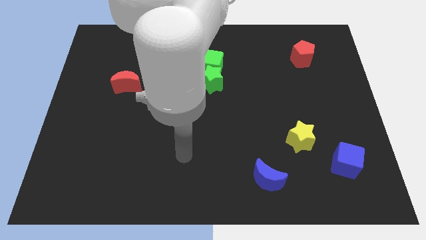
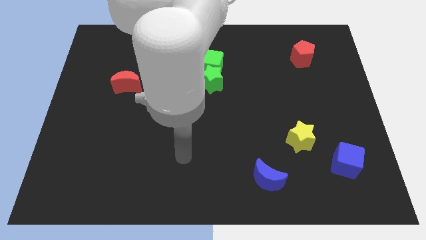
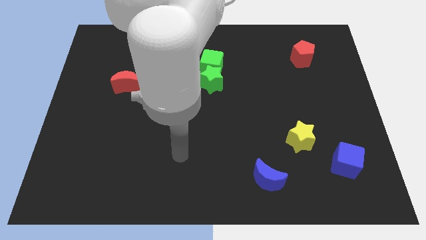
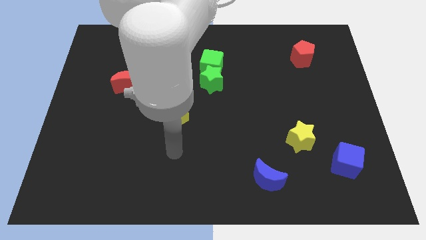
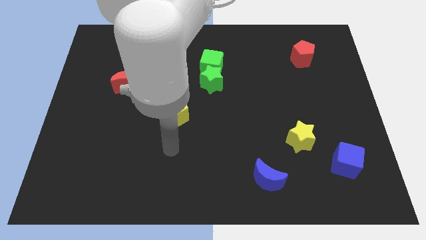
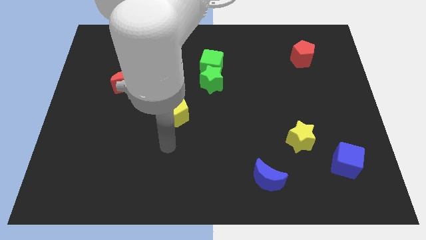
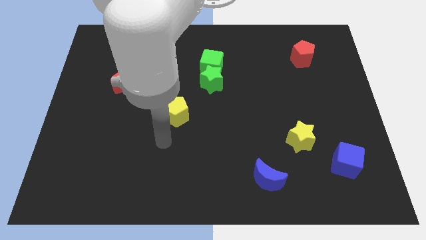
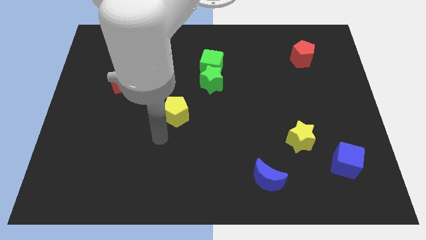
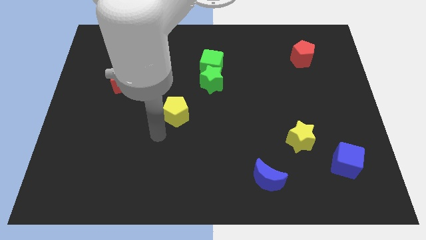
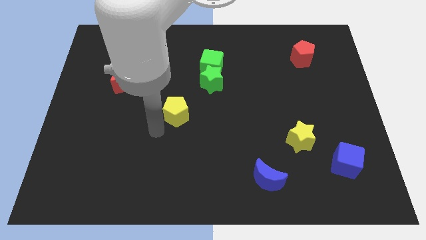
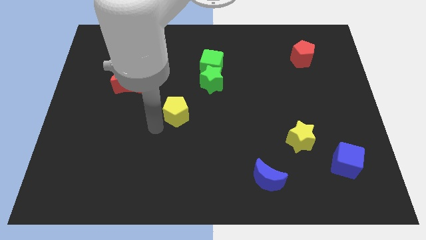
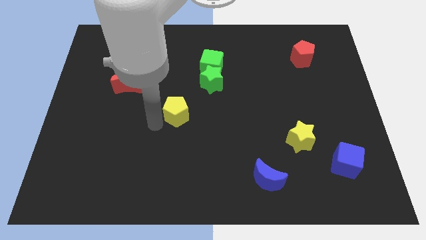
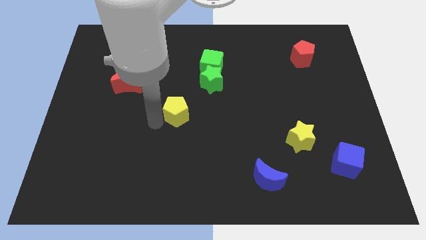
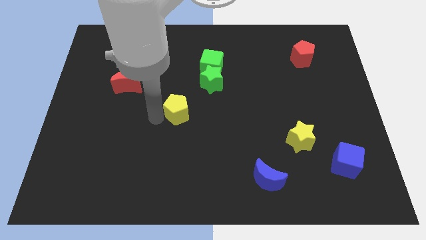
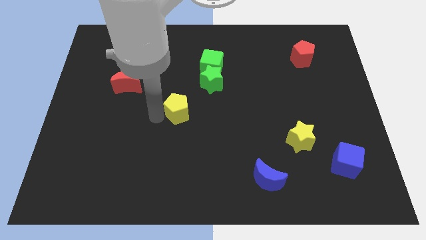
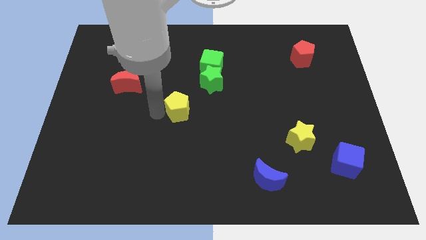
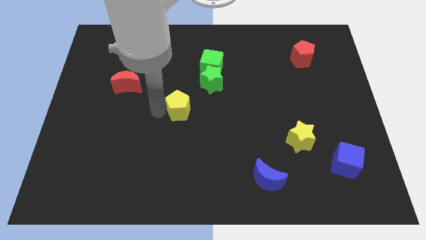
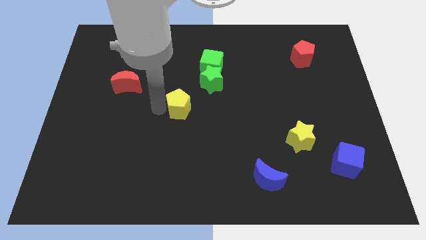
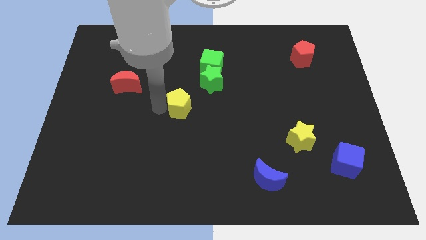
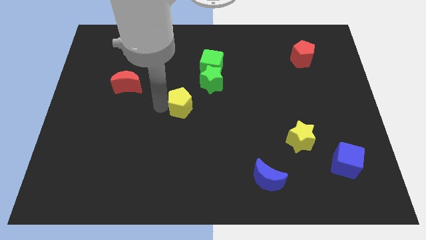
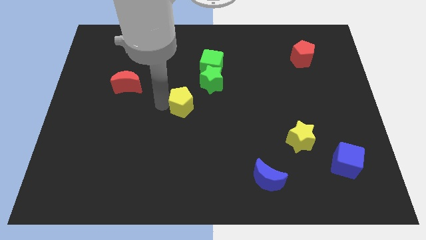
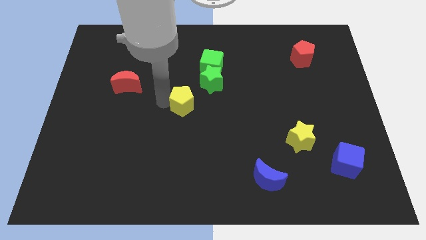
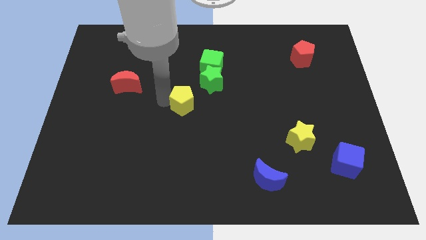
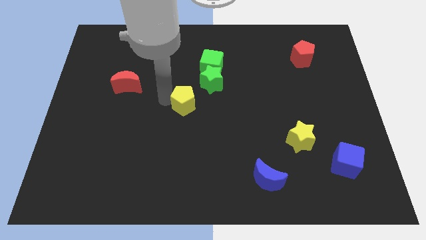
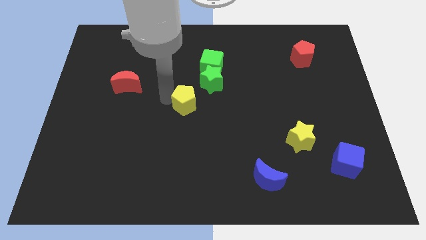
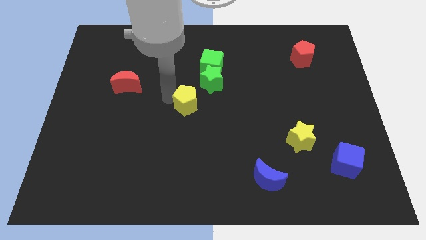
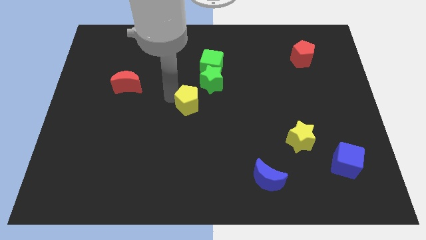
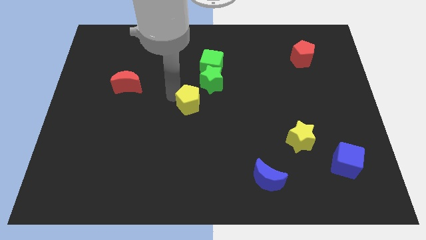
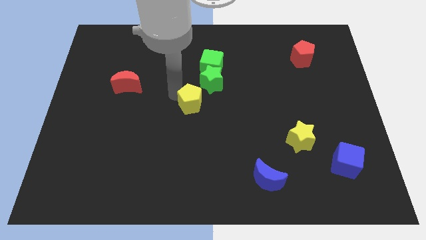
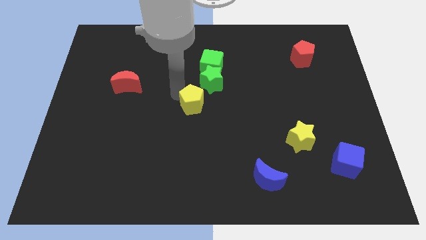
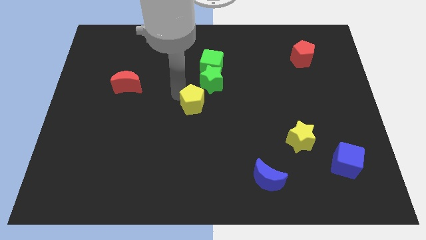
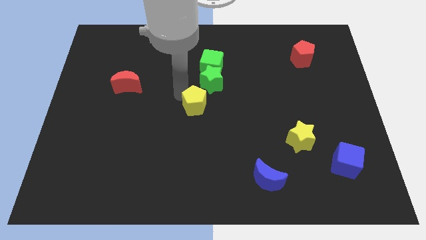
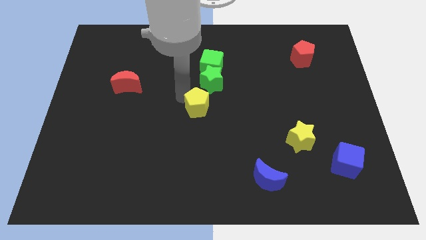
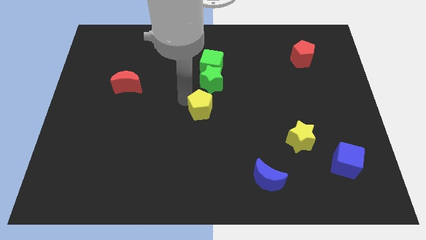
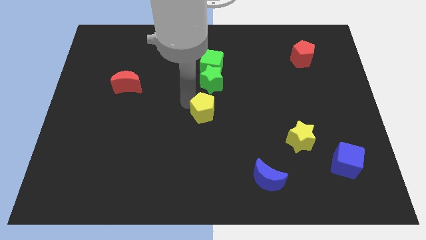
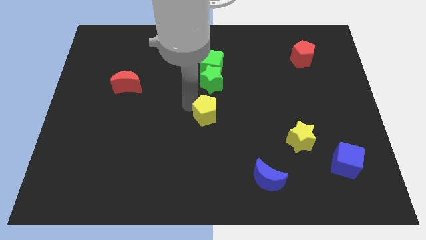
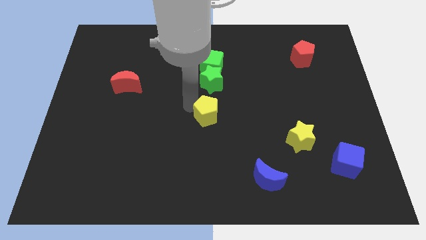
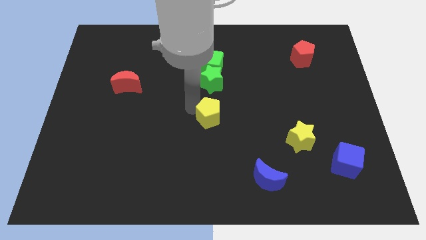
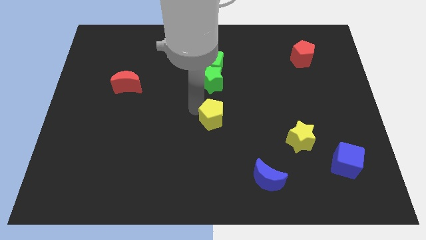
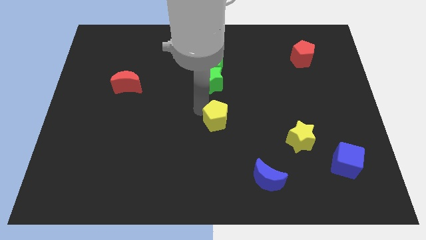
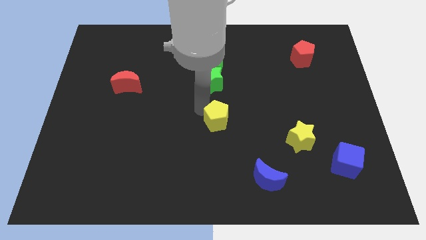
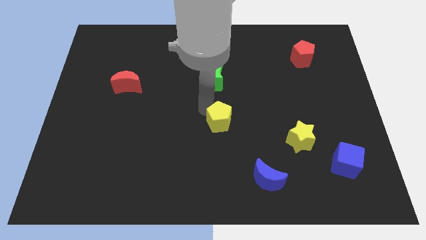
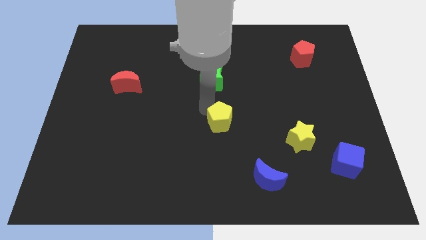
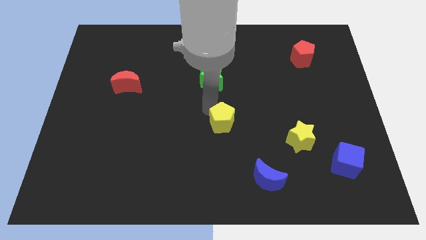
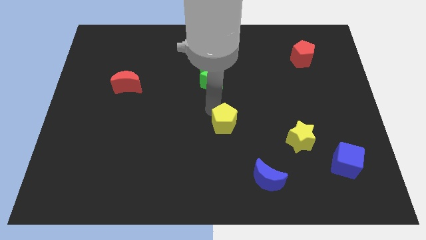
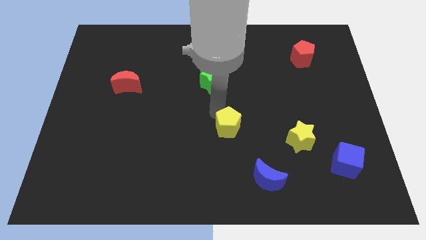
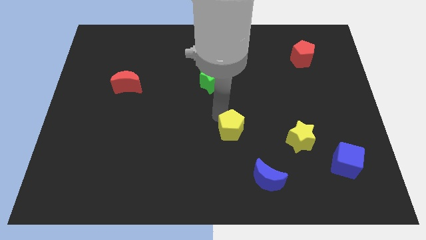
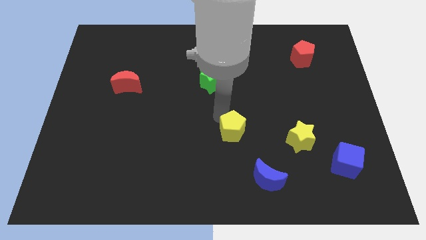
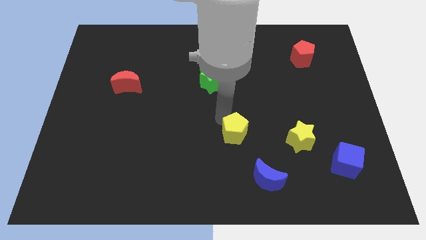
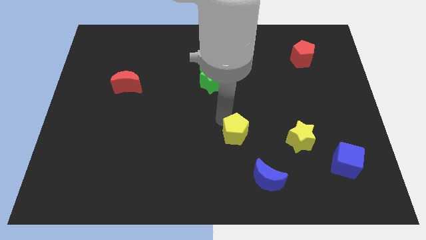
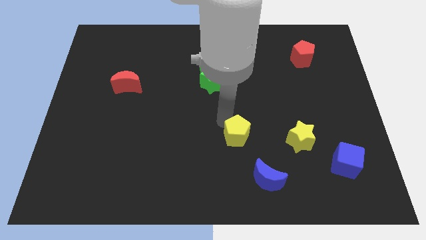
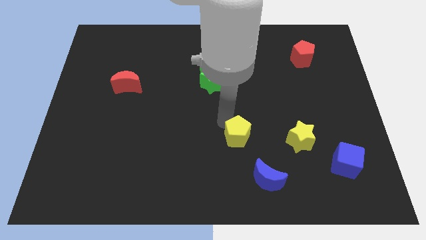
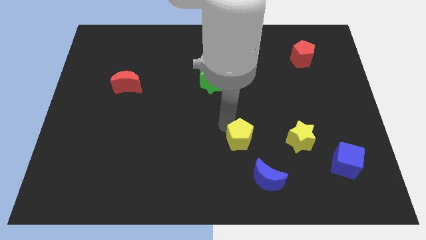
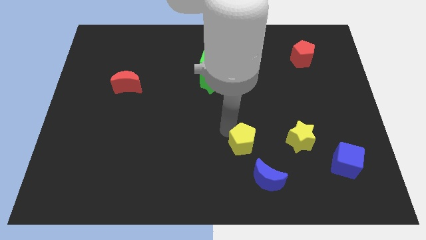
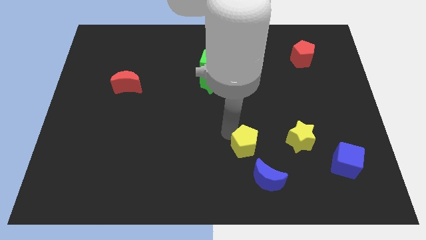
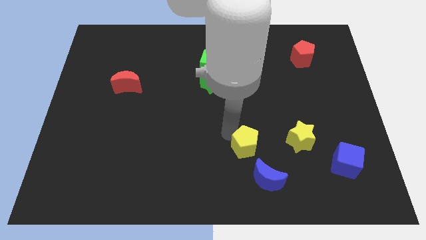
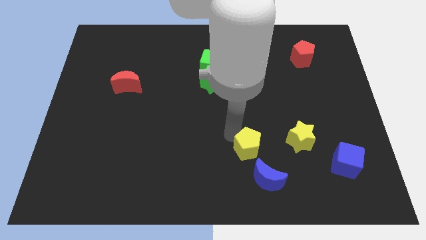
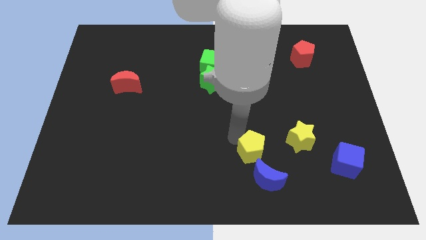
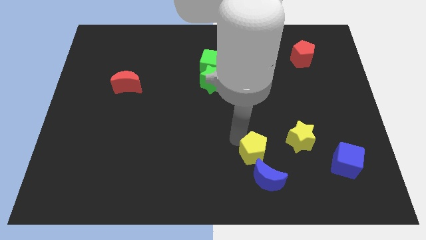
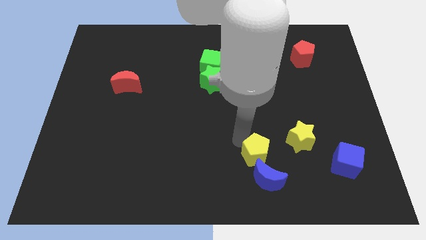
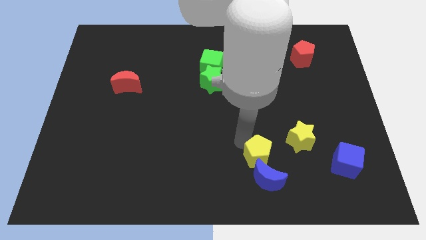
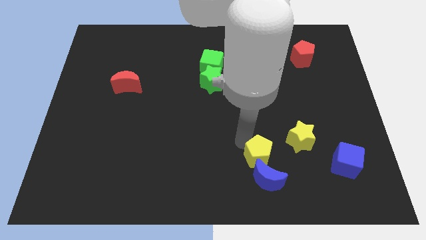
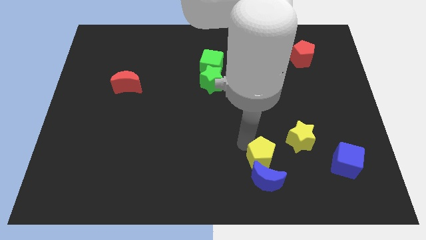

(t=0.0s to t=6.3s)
put the yellow pentagon next to the blue moon

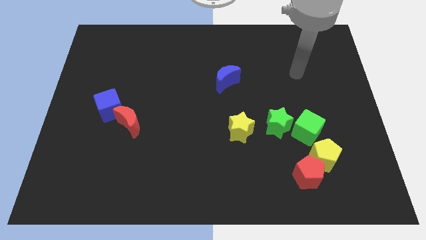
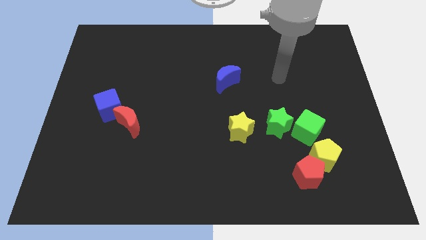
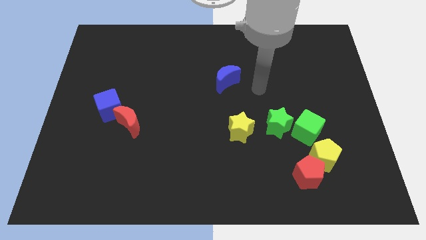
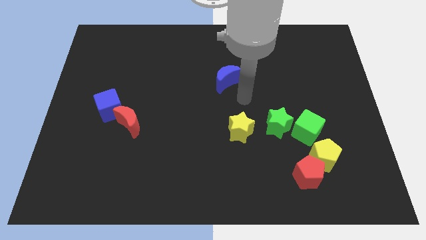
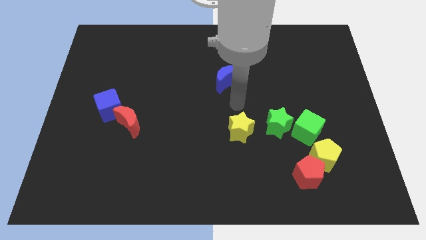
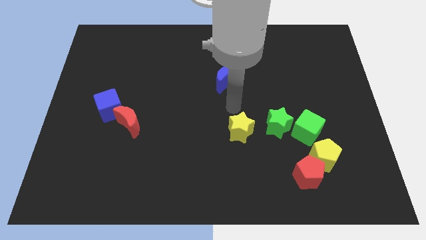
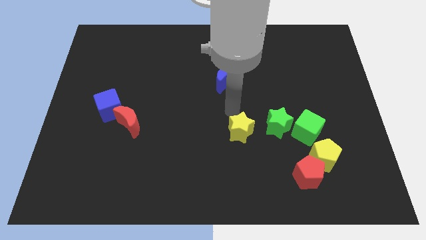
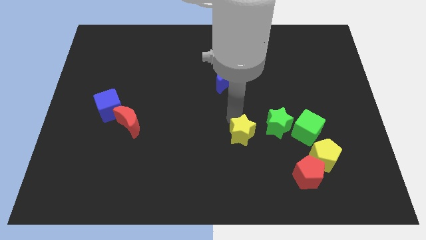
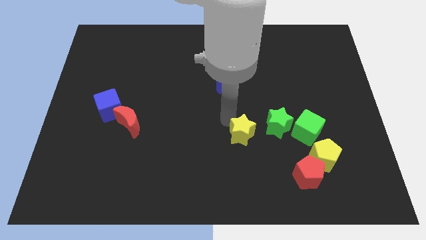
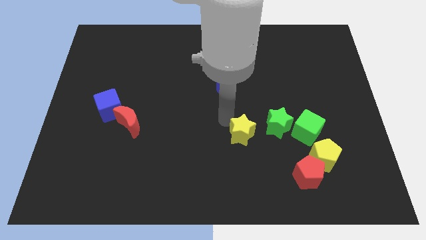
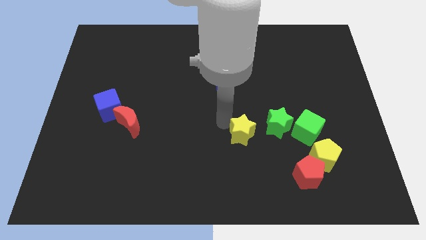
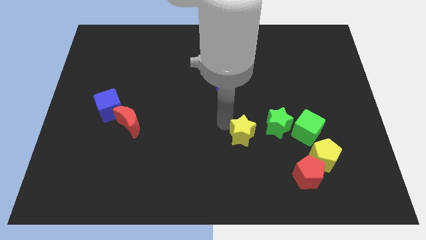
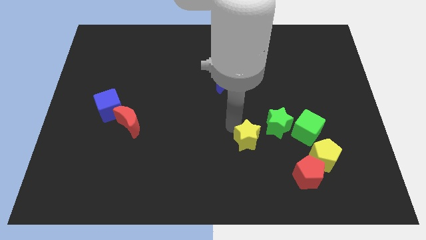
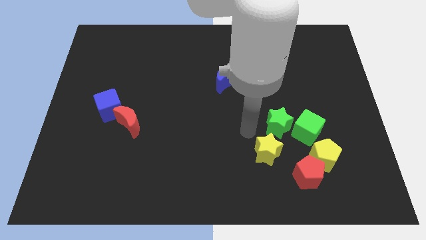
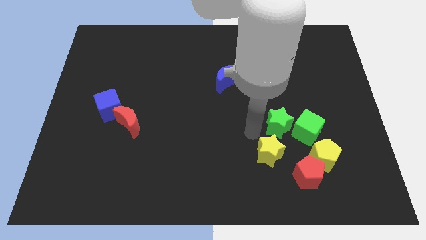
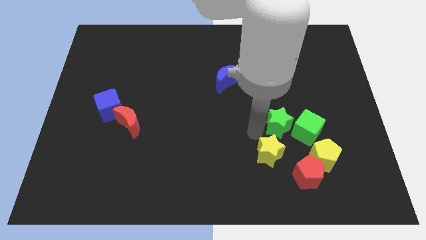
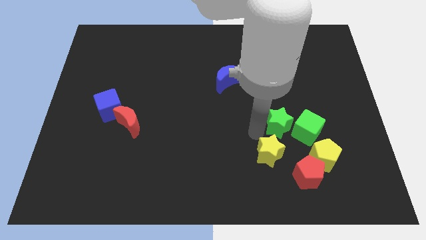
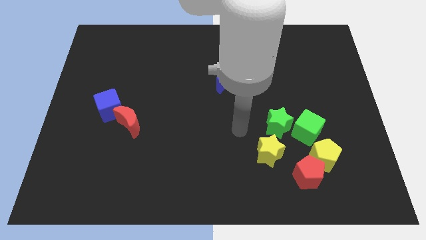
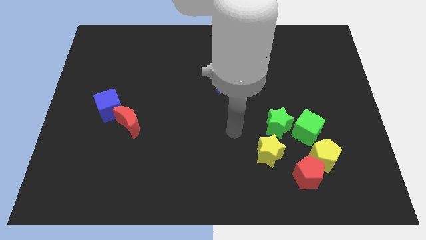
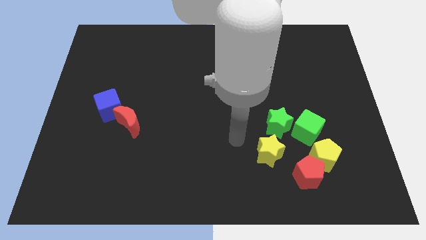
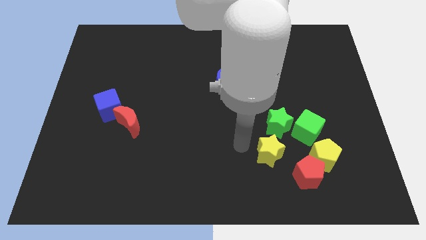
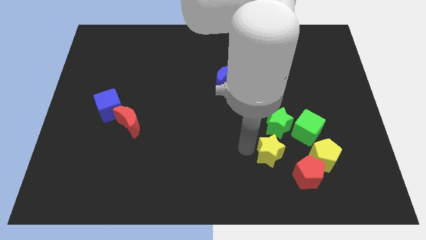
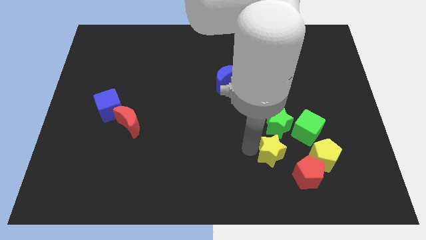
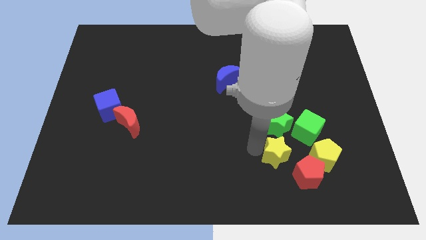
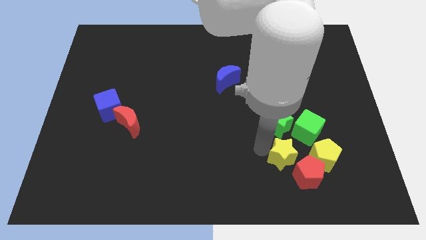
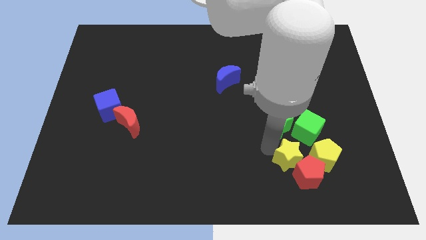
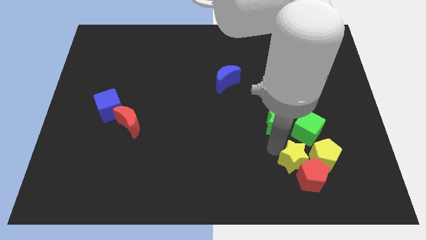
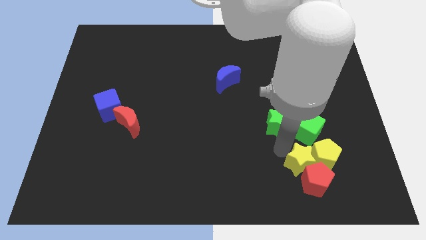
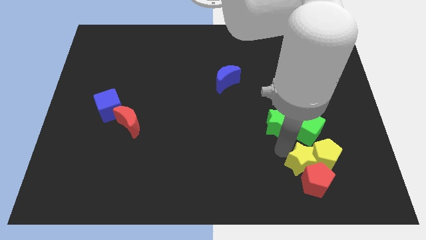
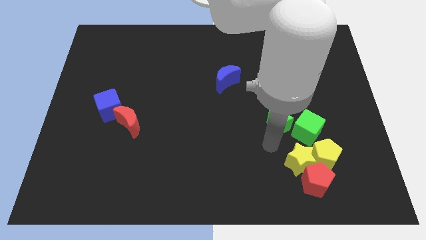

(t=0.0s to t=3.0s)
put the yellow star close to the yellow pentagon
